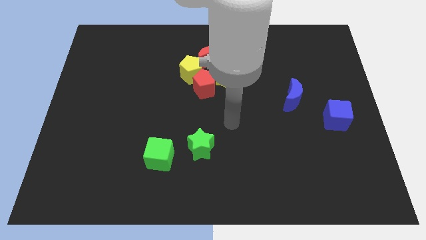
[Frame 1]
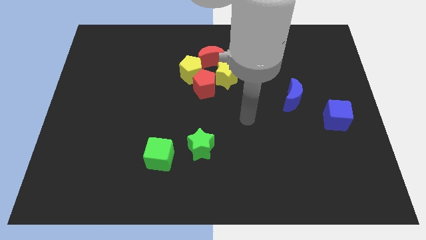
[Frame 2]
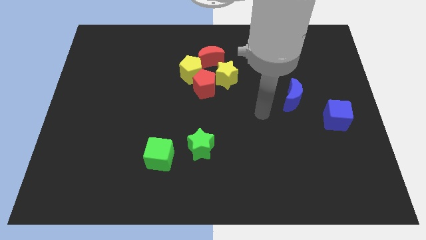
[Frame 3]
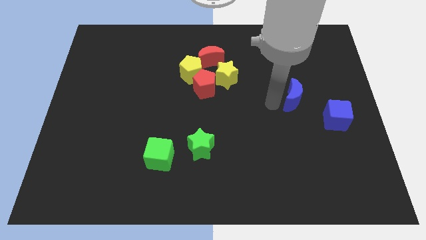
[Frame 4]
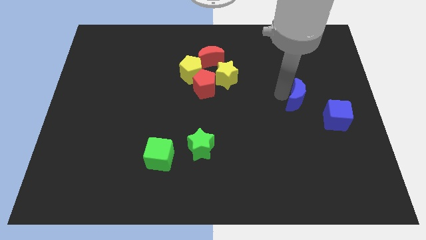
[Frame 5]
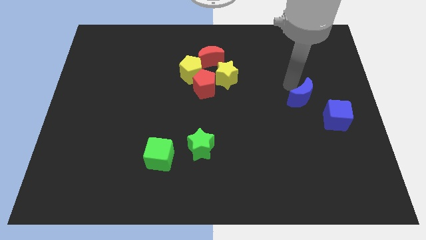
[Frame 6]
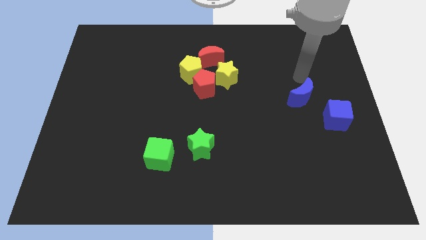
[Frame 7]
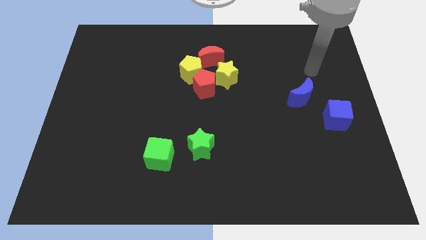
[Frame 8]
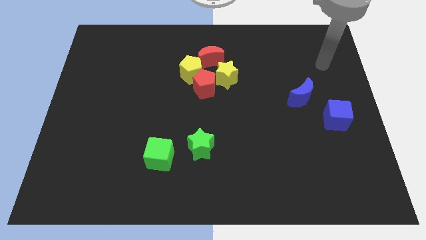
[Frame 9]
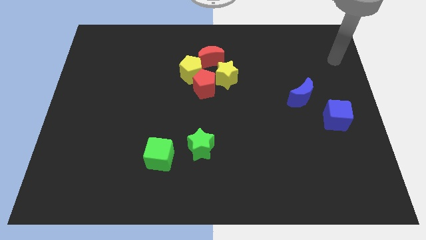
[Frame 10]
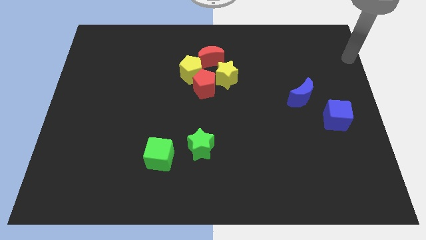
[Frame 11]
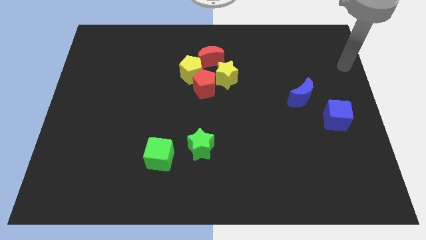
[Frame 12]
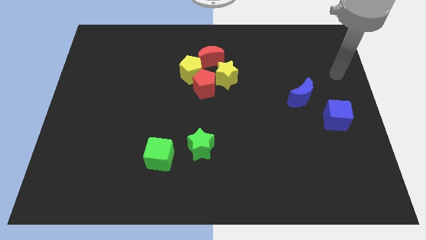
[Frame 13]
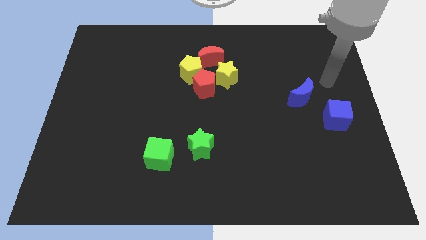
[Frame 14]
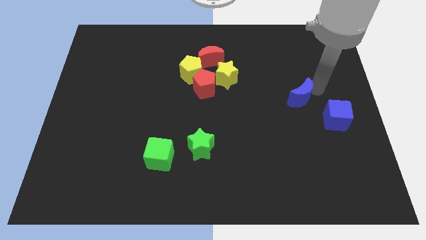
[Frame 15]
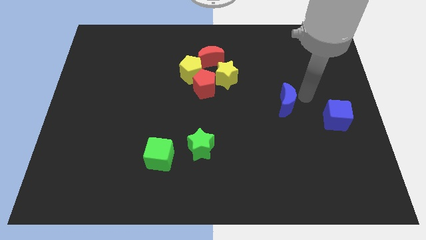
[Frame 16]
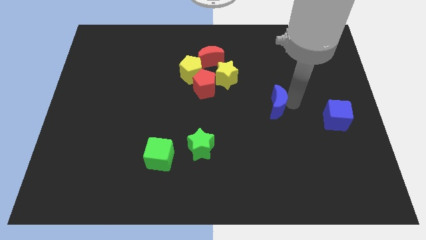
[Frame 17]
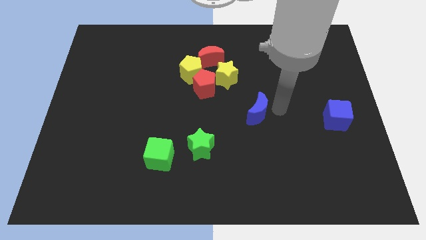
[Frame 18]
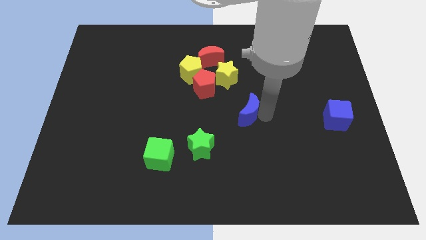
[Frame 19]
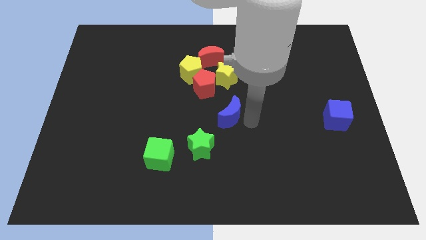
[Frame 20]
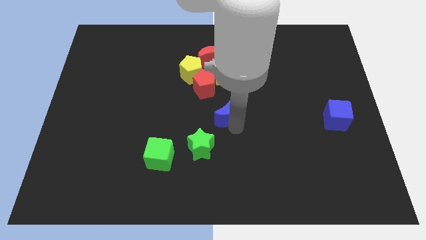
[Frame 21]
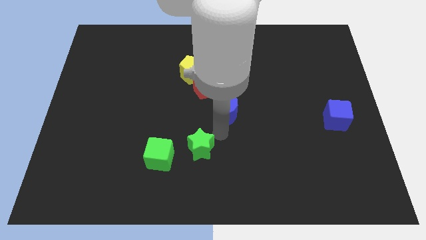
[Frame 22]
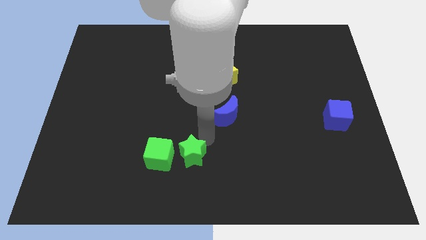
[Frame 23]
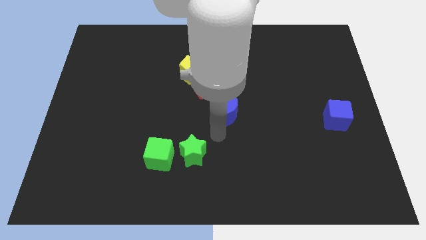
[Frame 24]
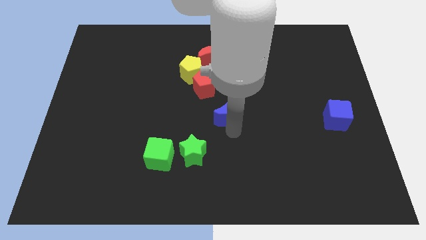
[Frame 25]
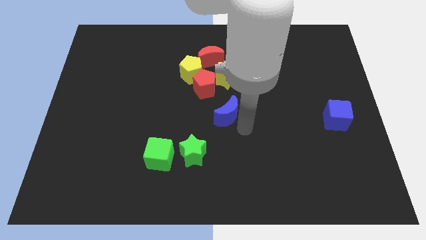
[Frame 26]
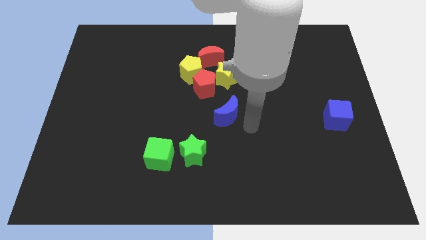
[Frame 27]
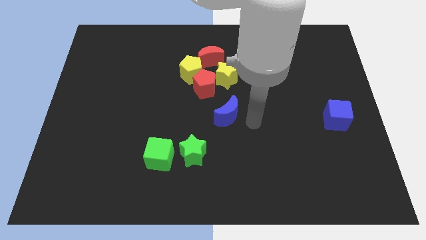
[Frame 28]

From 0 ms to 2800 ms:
move the blue moon to the center

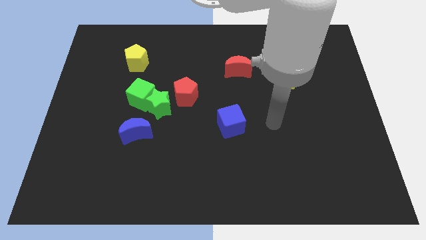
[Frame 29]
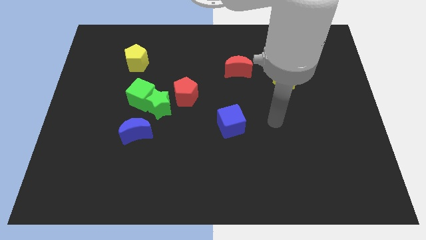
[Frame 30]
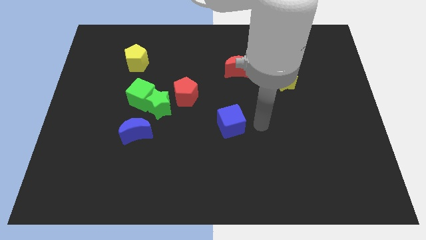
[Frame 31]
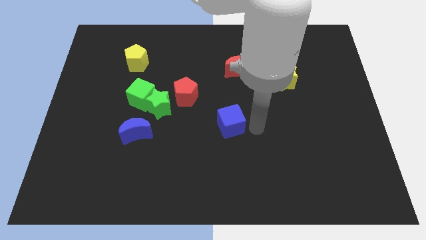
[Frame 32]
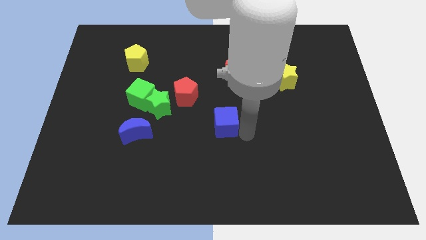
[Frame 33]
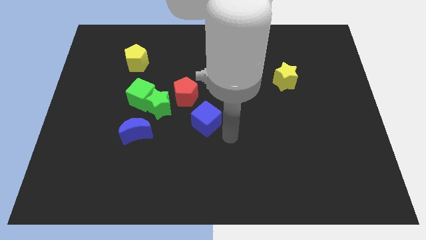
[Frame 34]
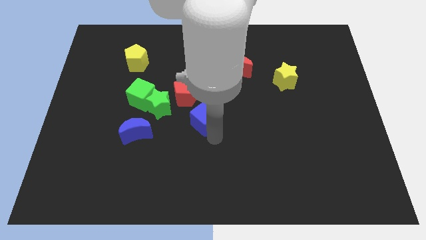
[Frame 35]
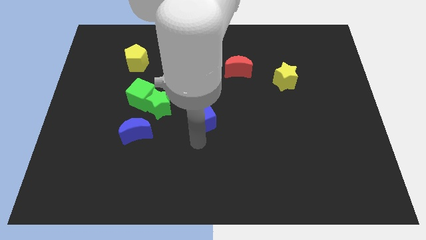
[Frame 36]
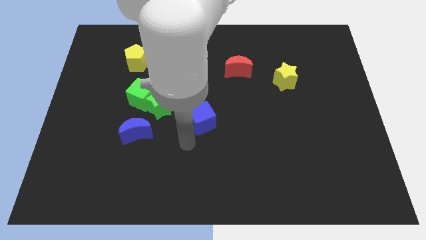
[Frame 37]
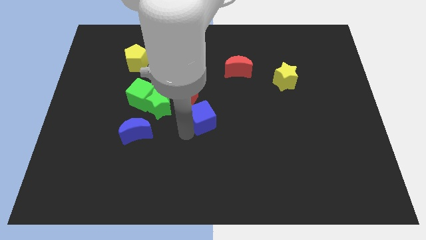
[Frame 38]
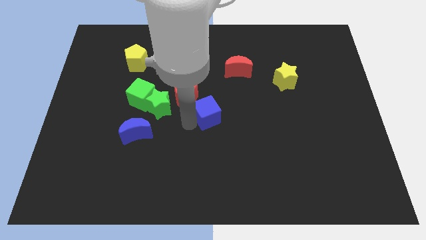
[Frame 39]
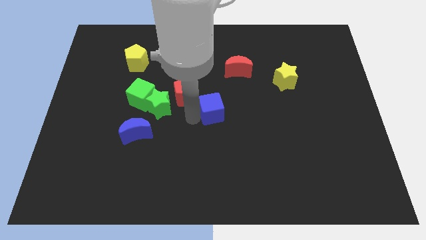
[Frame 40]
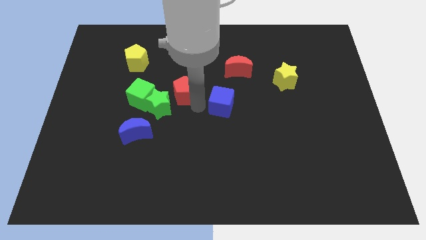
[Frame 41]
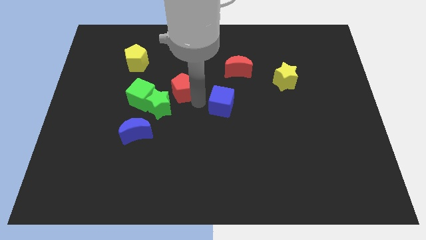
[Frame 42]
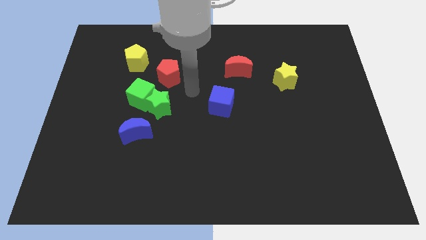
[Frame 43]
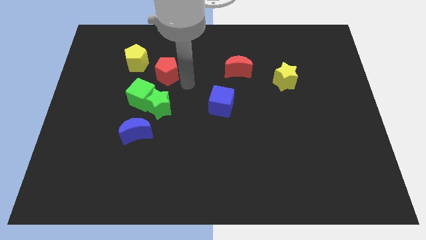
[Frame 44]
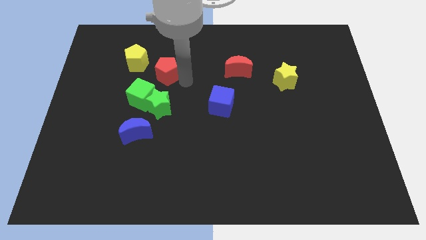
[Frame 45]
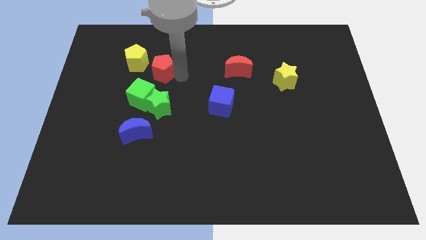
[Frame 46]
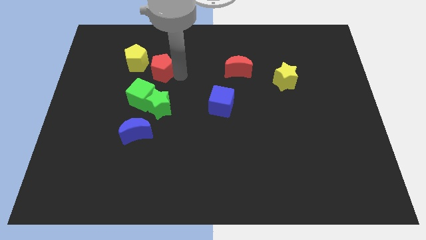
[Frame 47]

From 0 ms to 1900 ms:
move the red pentagon diagonally to the bottom right of yellow pentagon

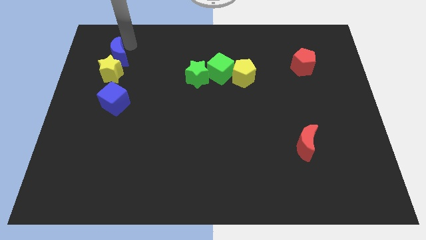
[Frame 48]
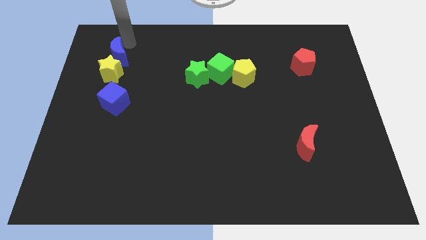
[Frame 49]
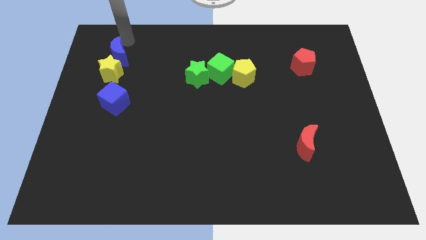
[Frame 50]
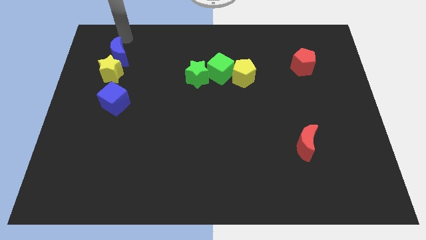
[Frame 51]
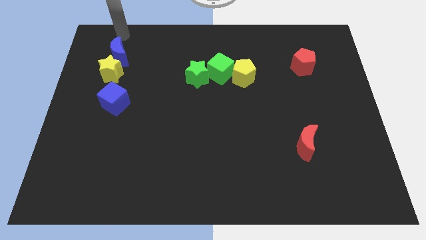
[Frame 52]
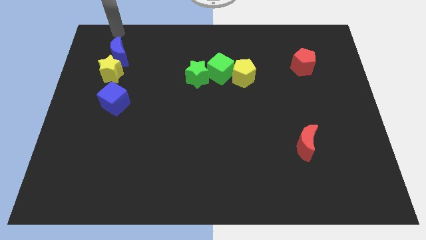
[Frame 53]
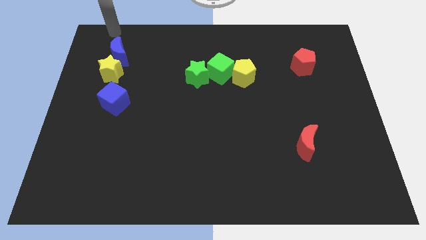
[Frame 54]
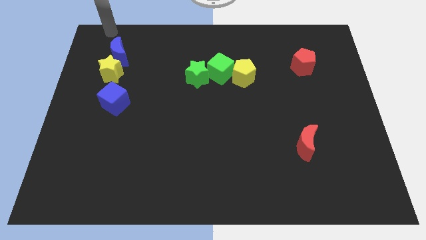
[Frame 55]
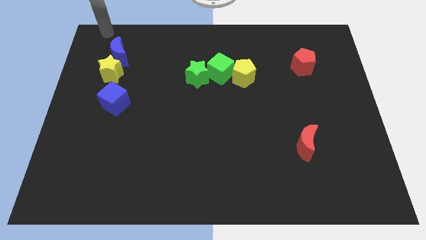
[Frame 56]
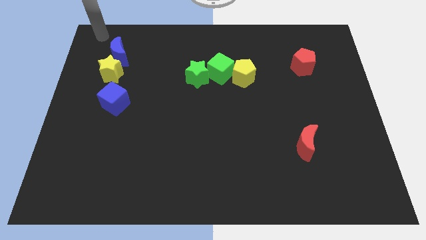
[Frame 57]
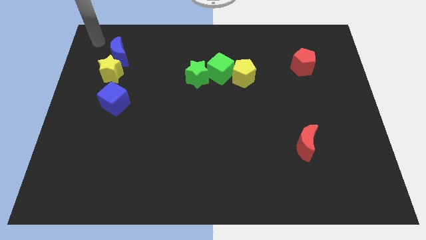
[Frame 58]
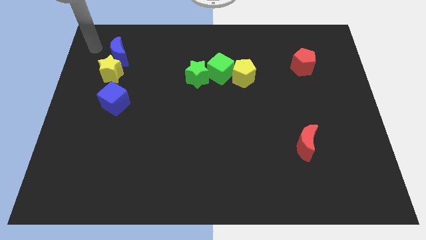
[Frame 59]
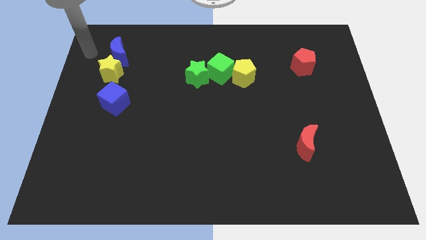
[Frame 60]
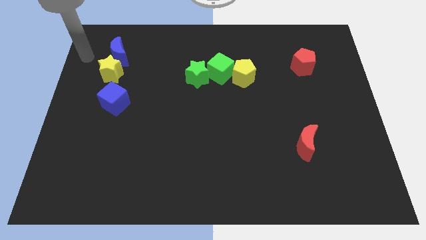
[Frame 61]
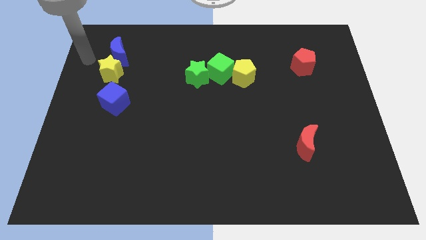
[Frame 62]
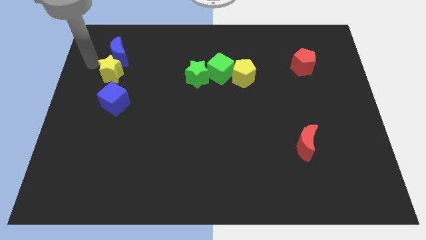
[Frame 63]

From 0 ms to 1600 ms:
move your arm away from the blue crescent

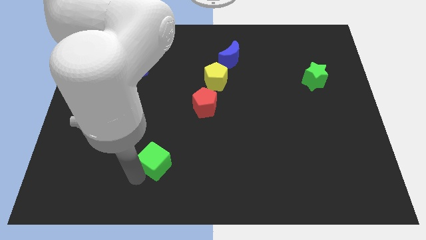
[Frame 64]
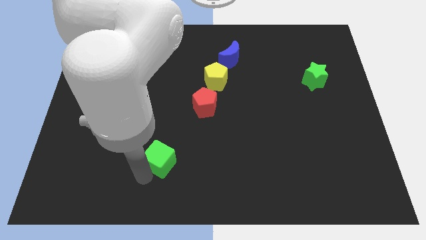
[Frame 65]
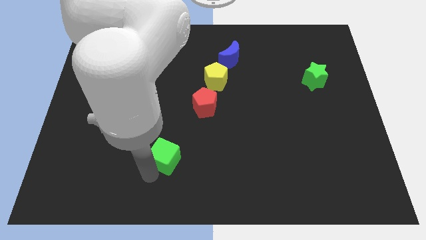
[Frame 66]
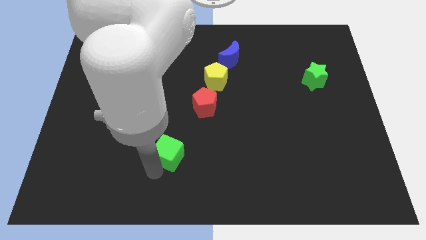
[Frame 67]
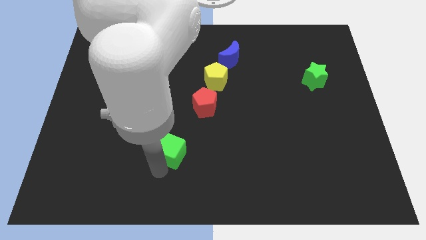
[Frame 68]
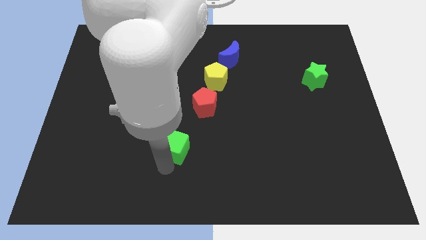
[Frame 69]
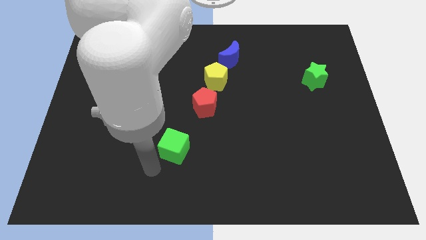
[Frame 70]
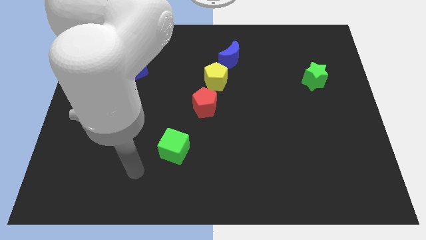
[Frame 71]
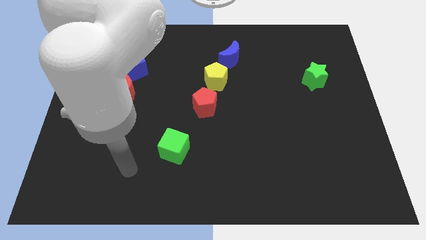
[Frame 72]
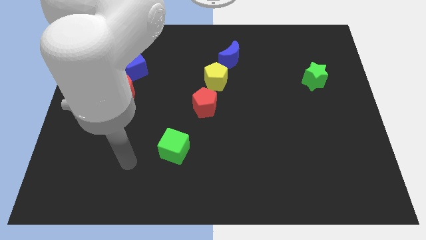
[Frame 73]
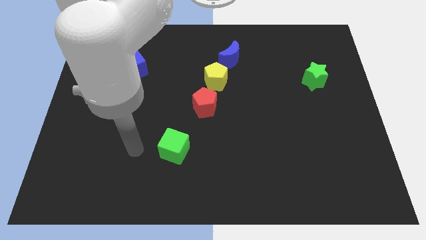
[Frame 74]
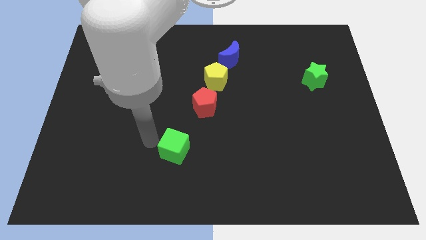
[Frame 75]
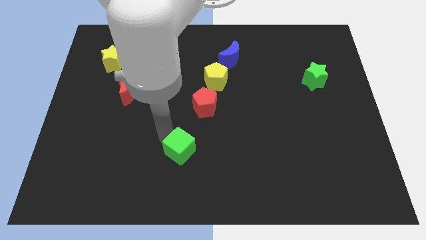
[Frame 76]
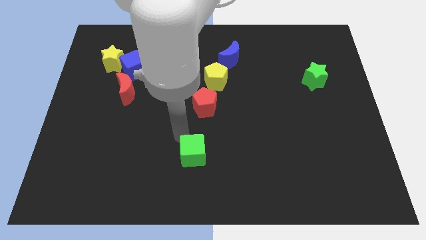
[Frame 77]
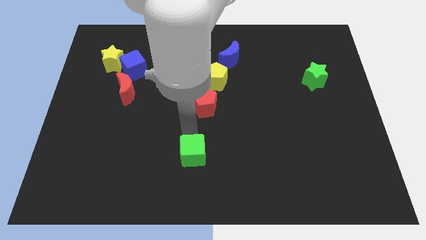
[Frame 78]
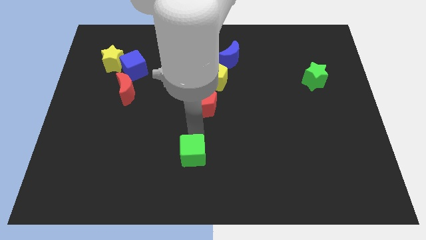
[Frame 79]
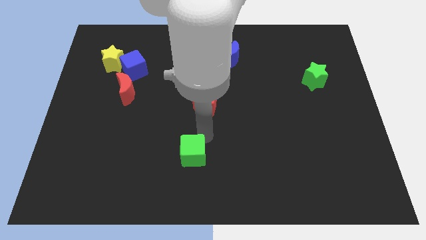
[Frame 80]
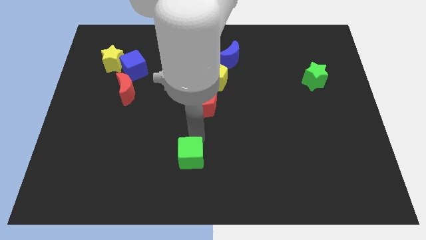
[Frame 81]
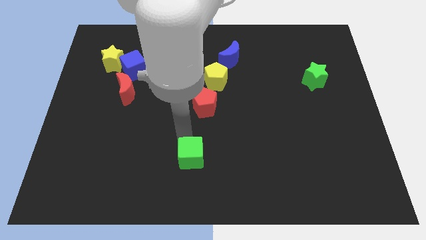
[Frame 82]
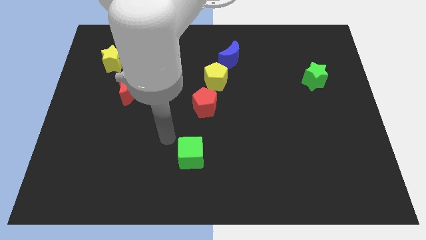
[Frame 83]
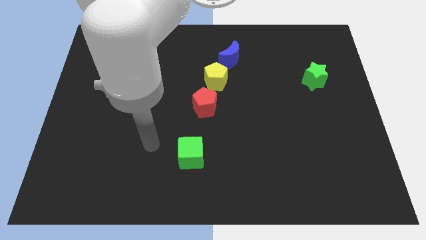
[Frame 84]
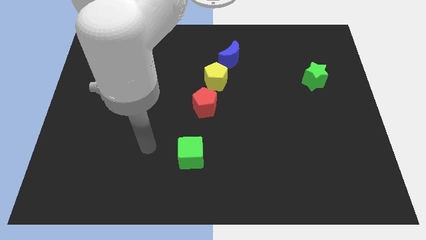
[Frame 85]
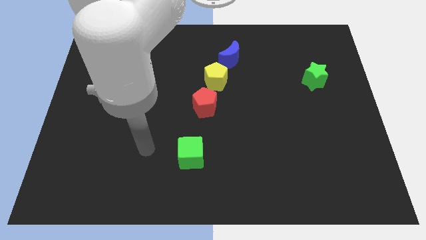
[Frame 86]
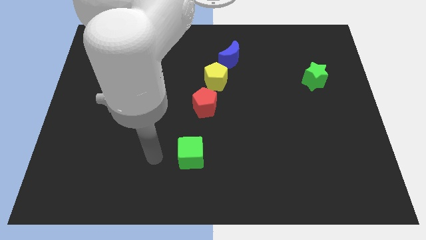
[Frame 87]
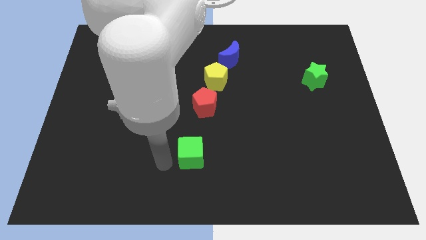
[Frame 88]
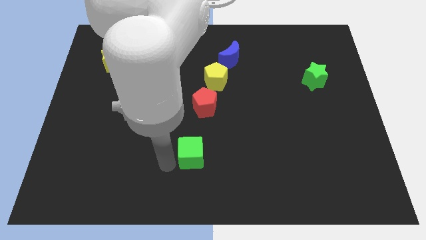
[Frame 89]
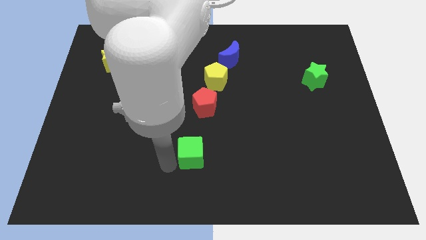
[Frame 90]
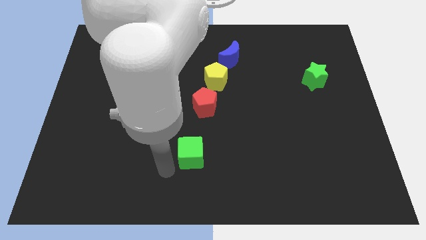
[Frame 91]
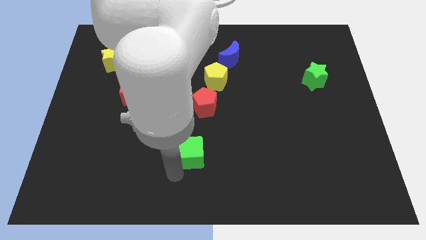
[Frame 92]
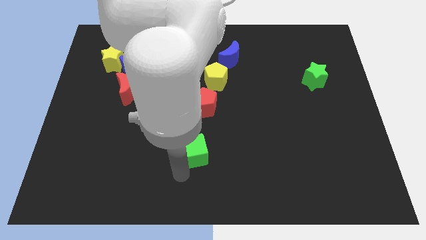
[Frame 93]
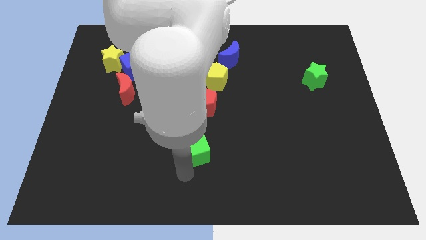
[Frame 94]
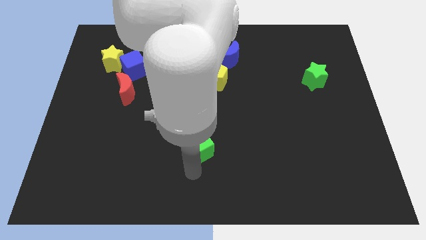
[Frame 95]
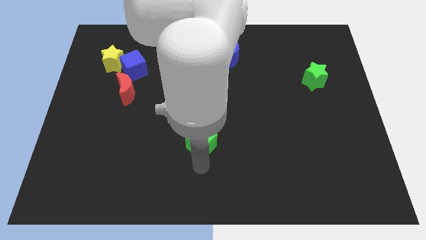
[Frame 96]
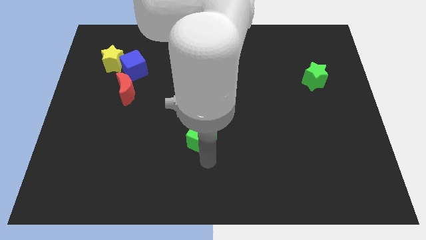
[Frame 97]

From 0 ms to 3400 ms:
slide the green cube towards the bottom side of the red pentagon
